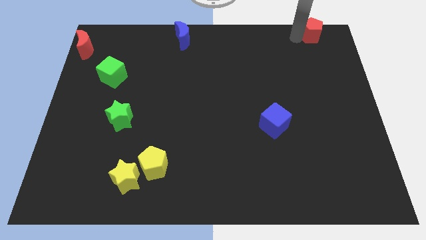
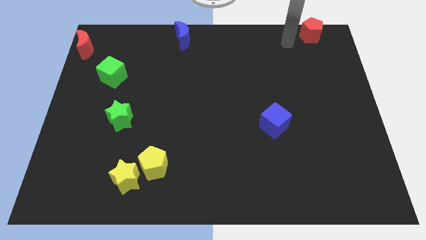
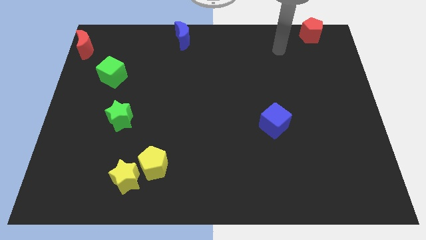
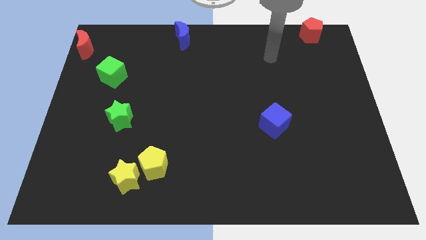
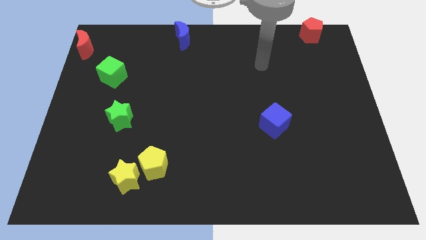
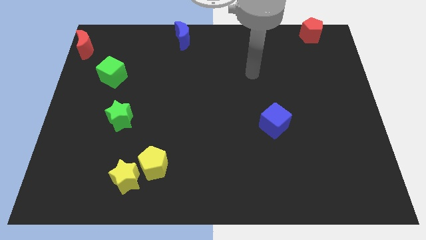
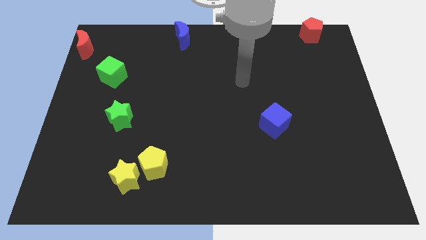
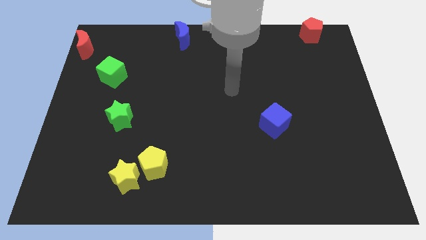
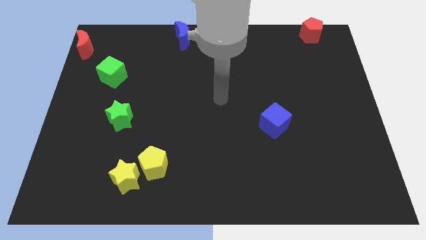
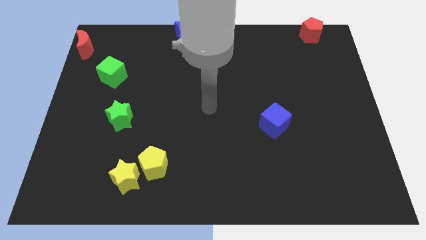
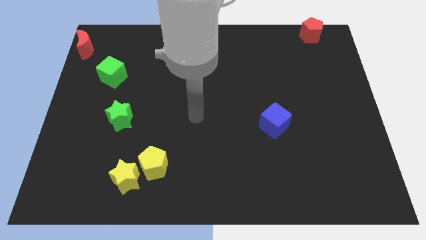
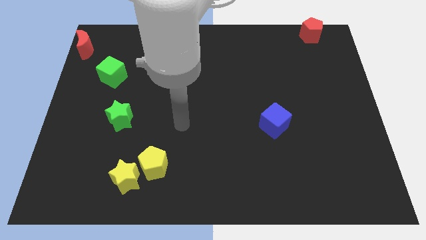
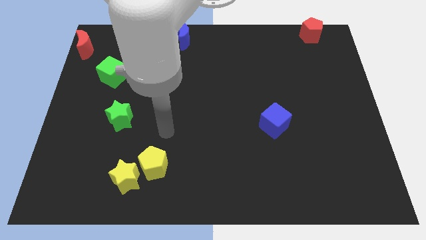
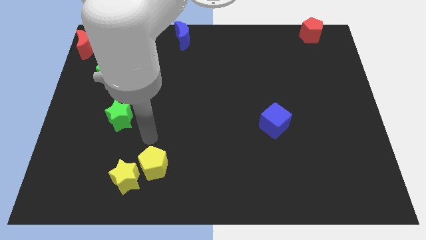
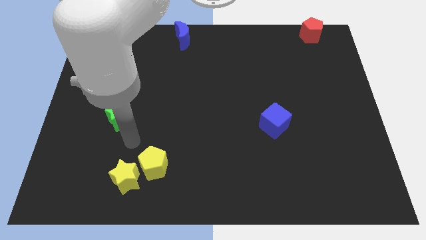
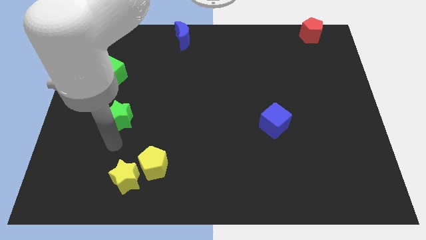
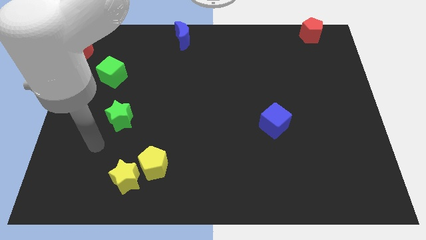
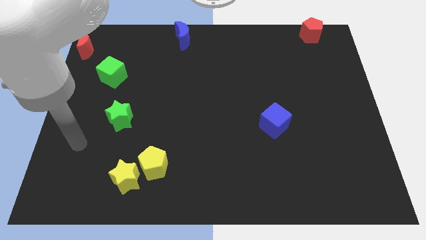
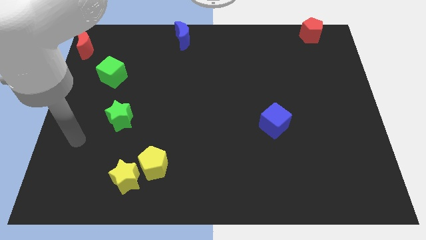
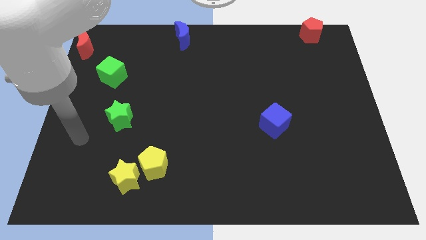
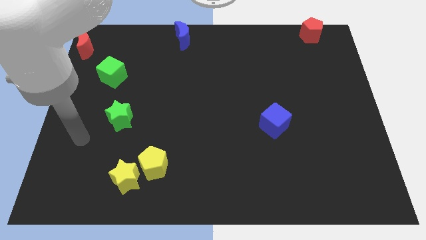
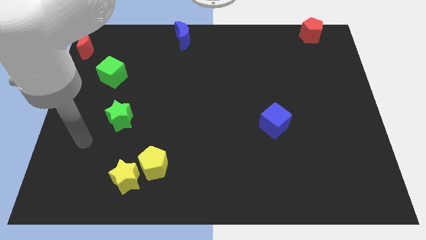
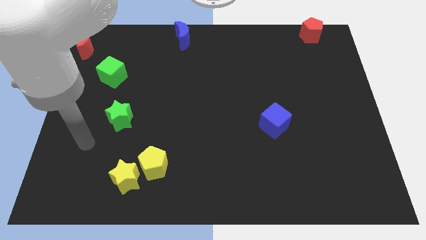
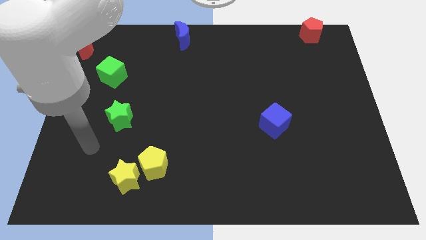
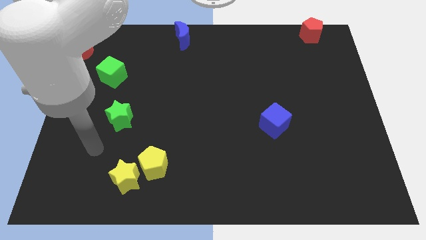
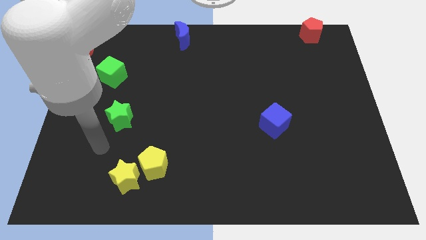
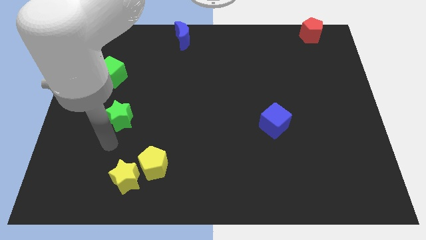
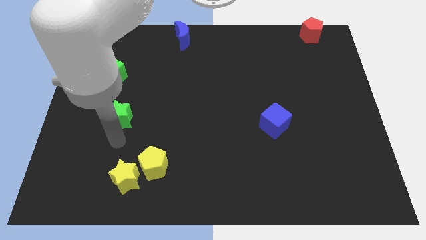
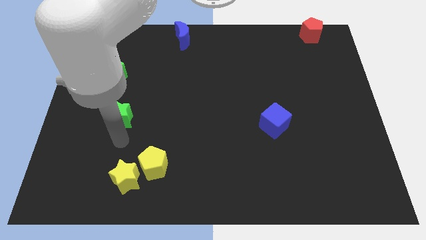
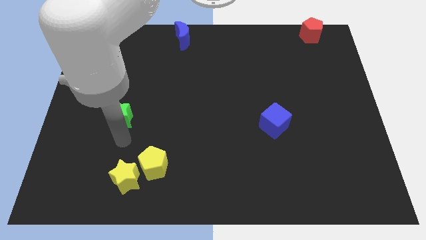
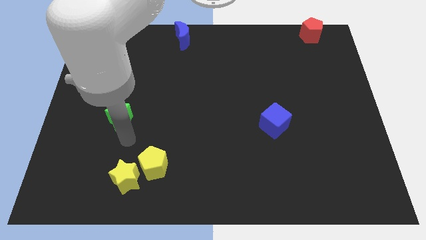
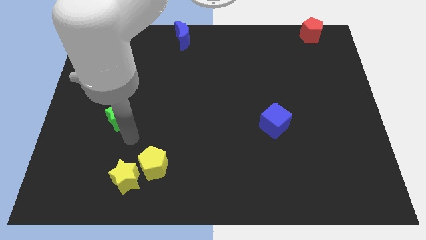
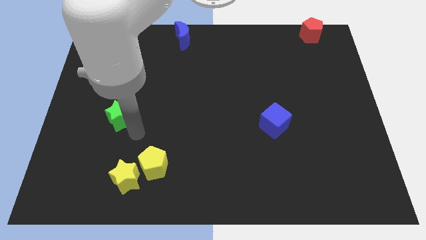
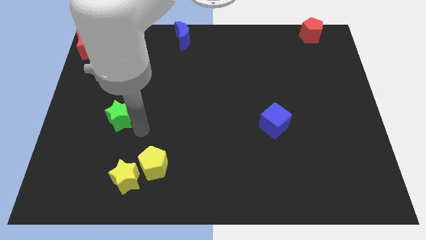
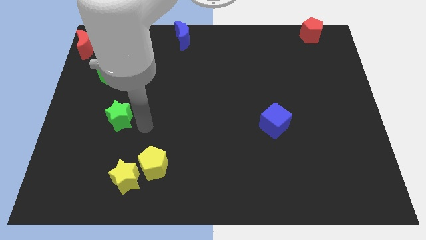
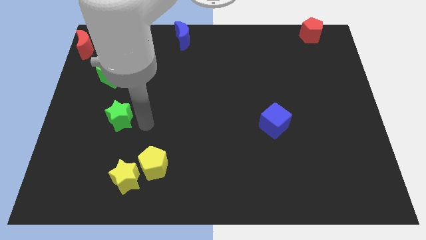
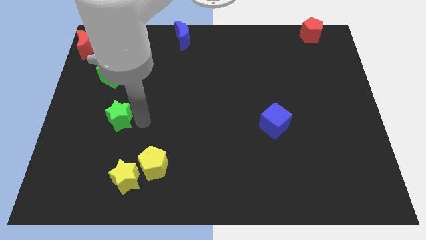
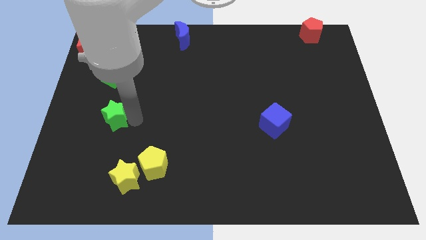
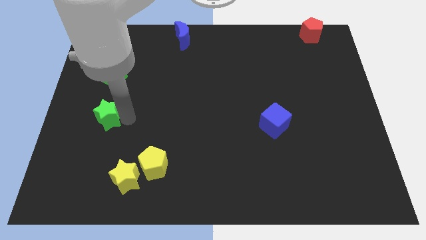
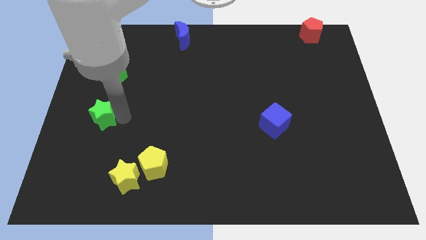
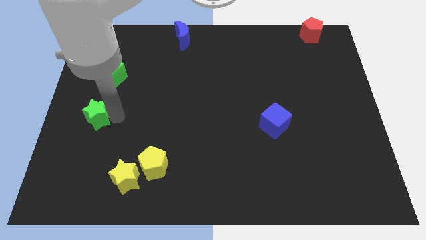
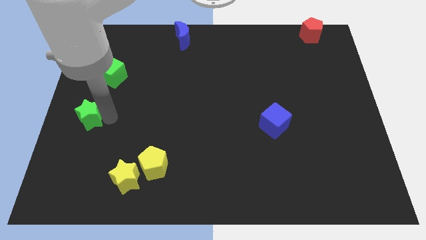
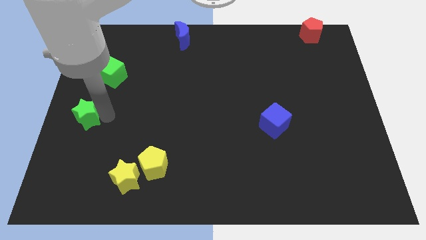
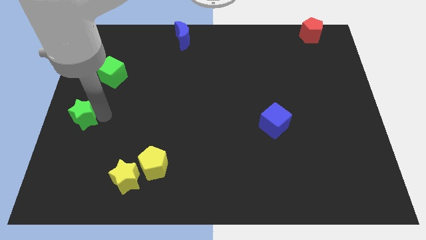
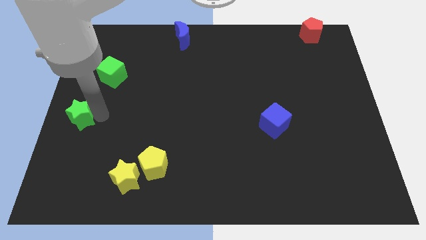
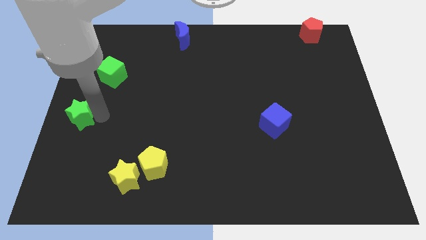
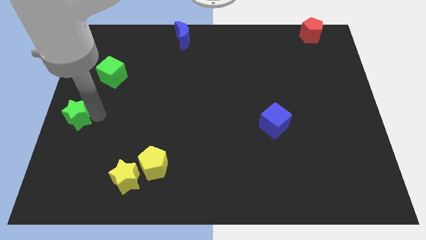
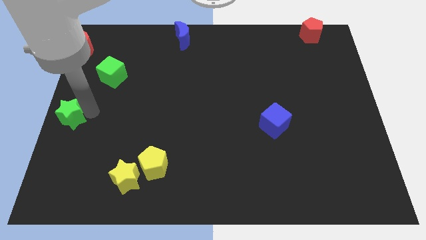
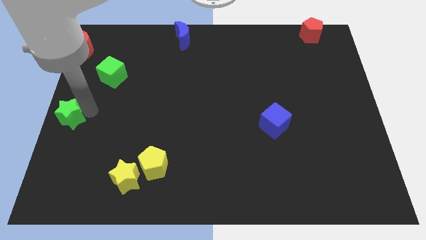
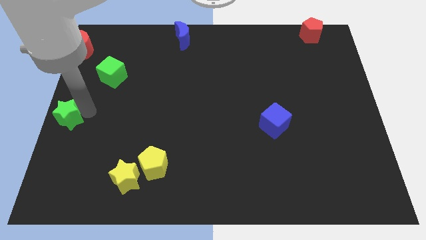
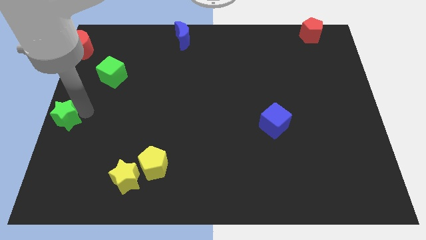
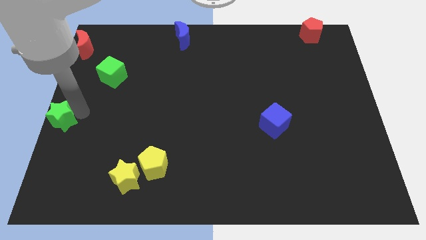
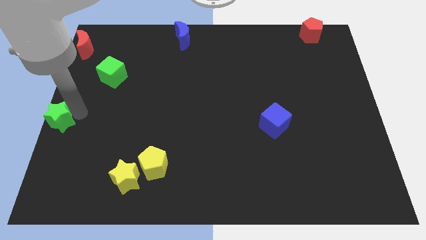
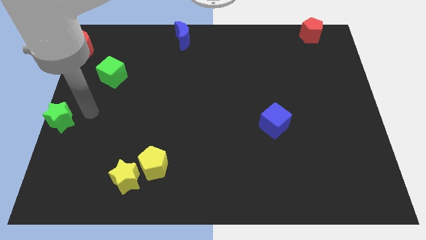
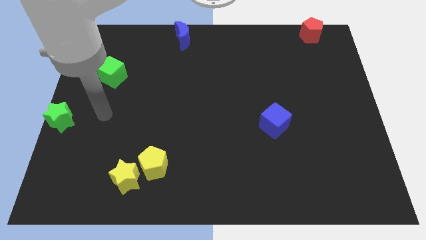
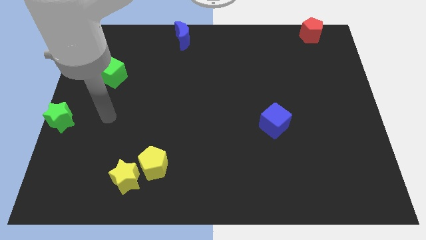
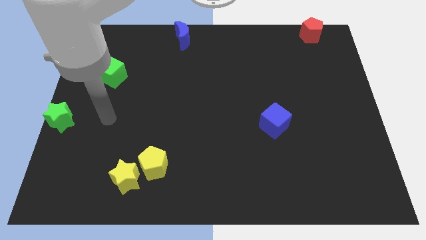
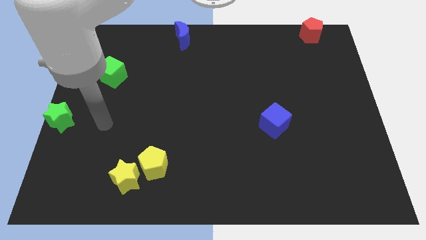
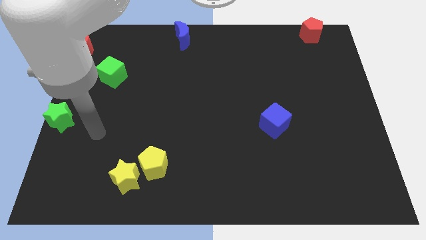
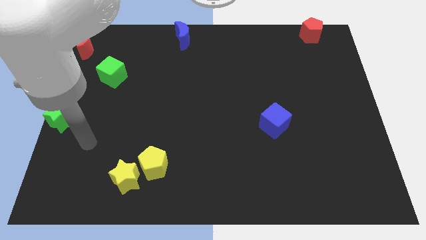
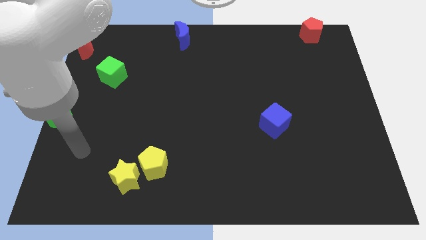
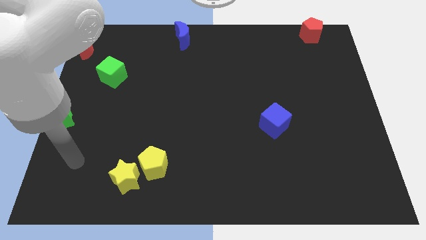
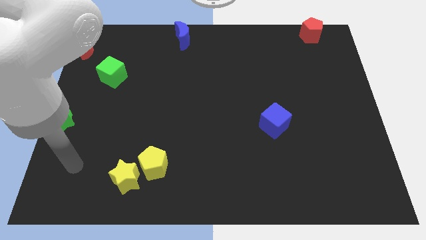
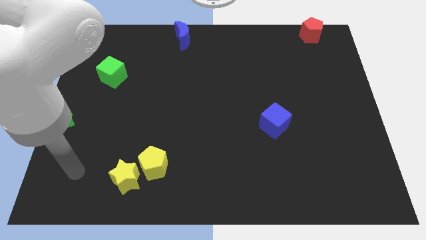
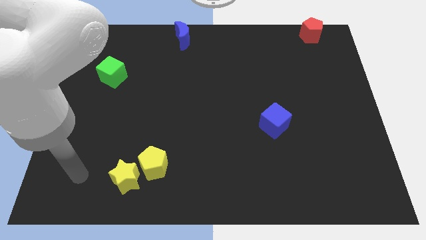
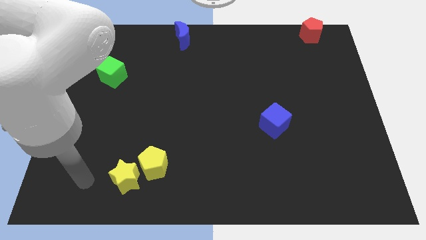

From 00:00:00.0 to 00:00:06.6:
place the green star left to the green cube

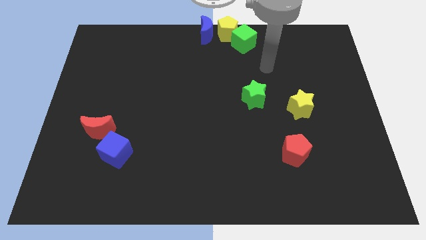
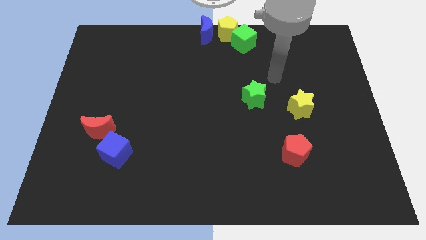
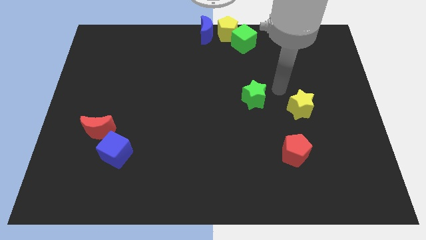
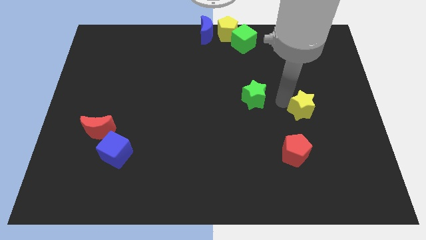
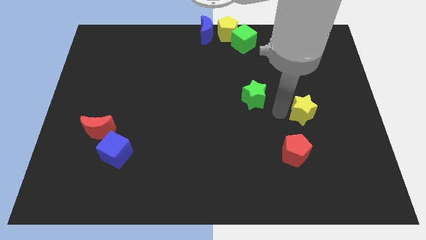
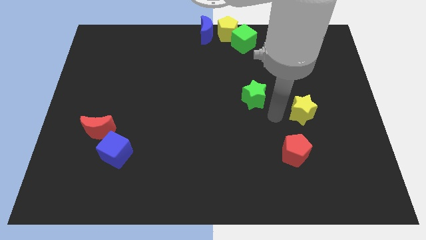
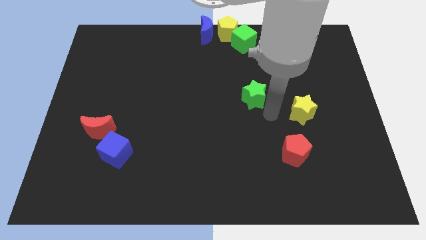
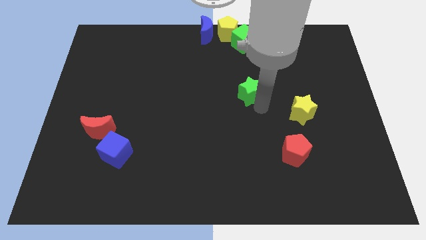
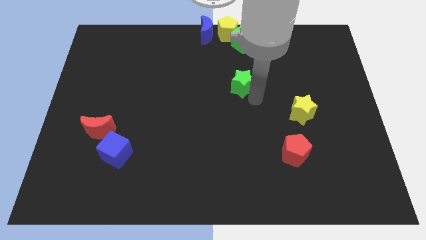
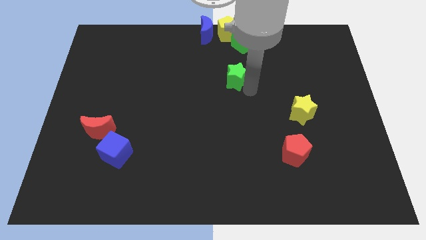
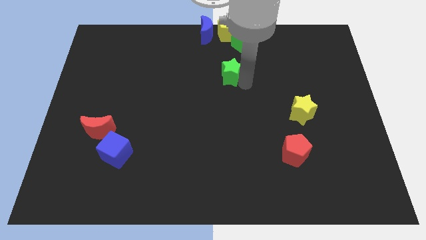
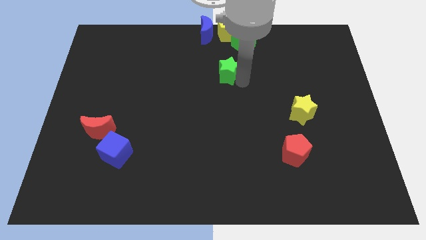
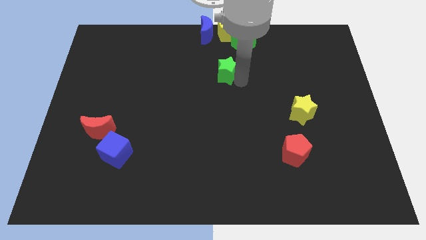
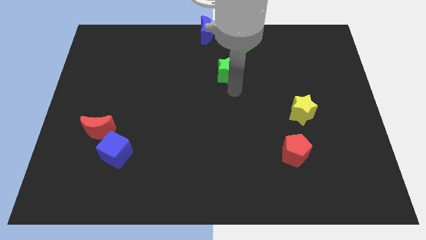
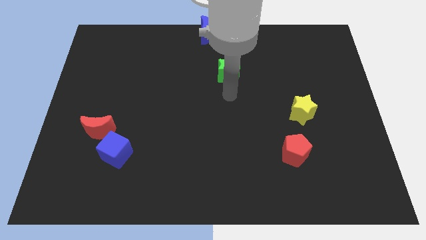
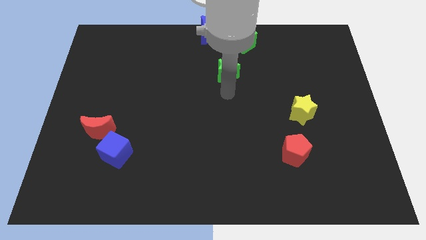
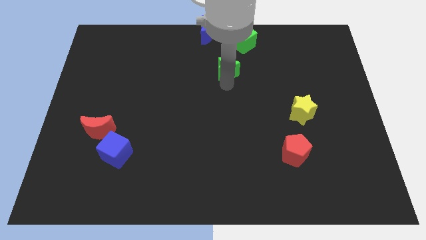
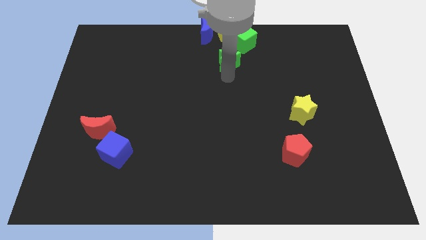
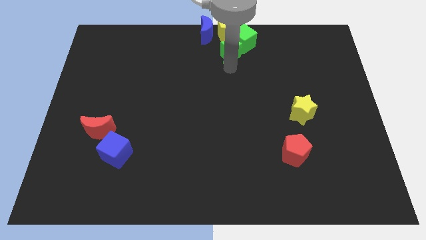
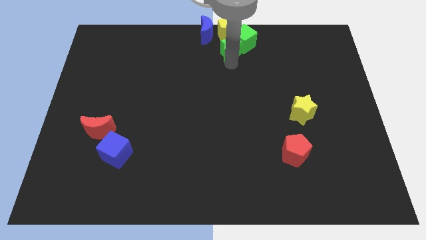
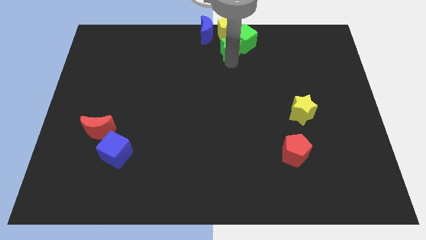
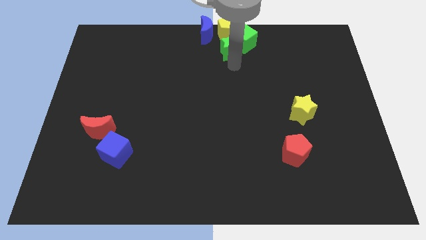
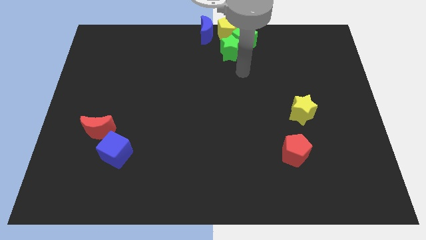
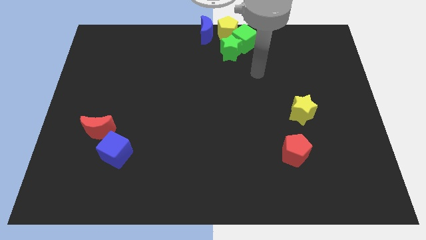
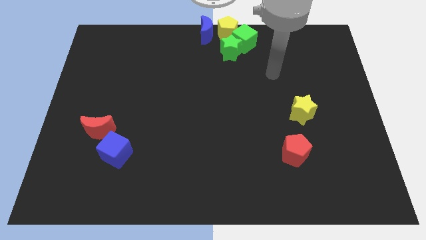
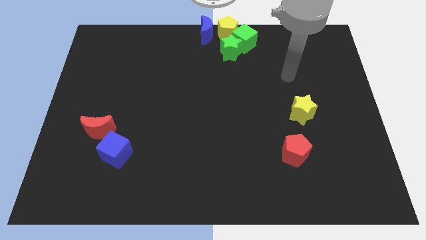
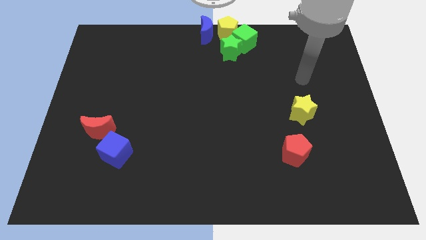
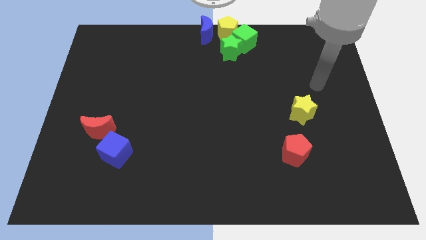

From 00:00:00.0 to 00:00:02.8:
push green star in to green cube
